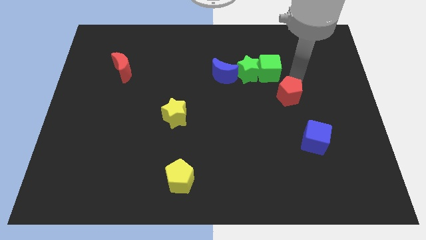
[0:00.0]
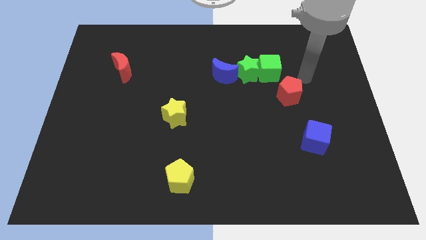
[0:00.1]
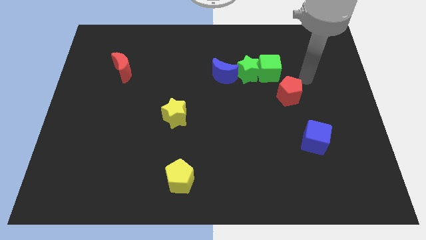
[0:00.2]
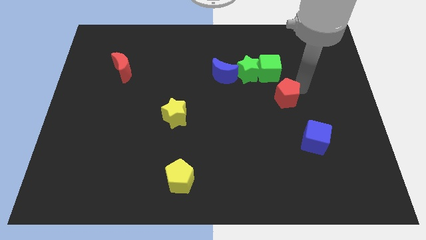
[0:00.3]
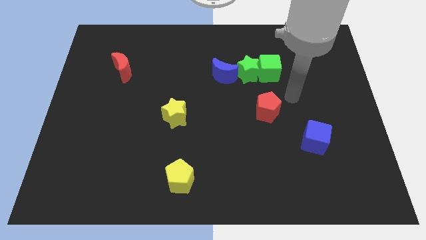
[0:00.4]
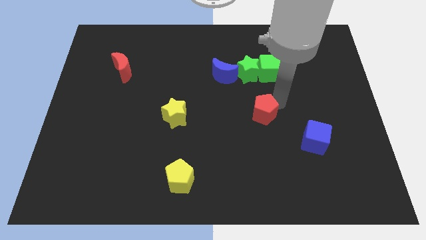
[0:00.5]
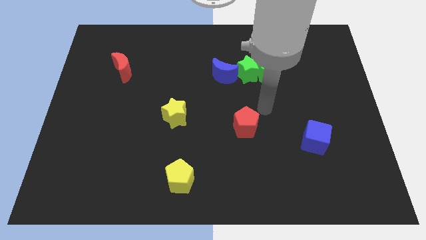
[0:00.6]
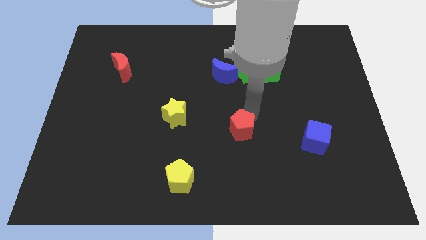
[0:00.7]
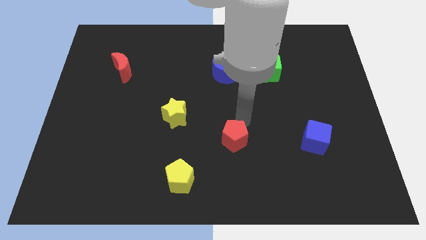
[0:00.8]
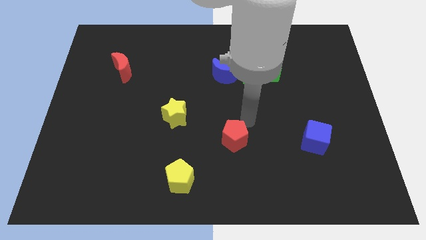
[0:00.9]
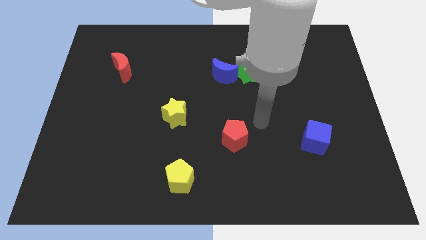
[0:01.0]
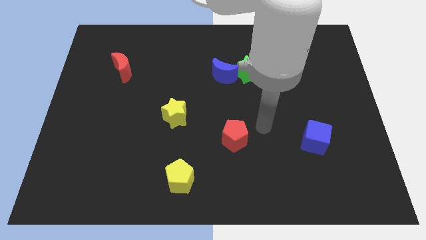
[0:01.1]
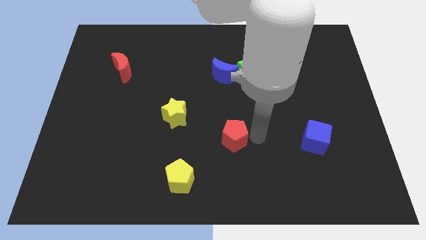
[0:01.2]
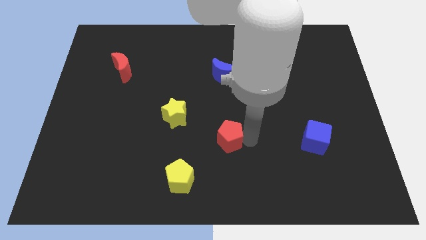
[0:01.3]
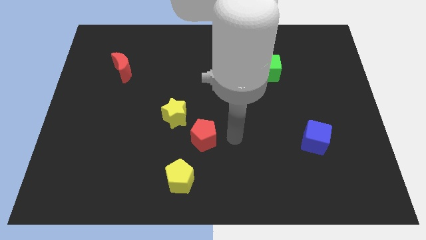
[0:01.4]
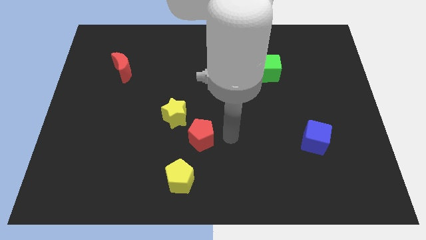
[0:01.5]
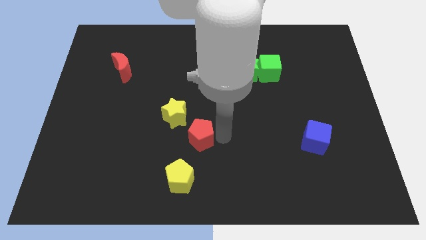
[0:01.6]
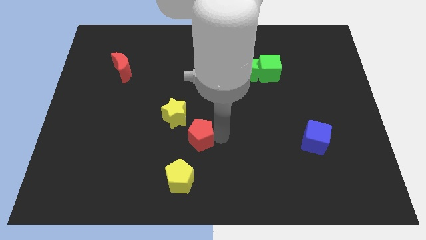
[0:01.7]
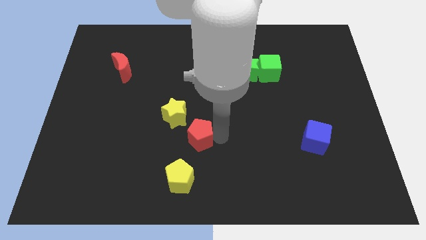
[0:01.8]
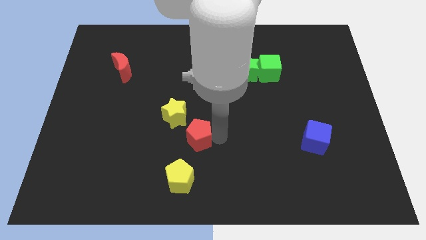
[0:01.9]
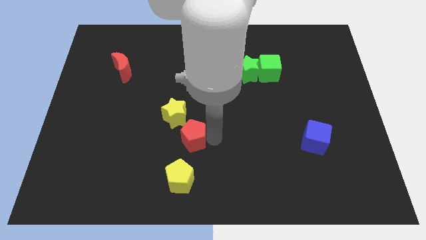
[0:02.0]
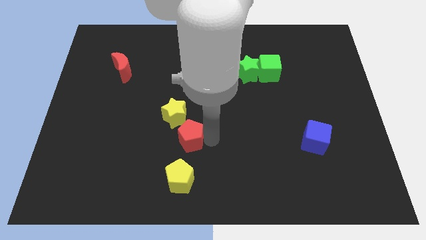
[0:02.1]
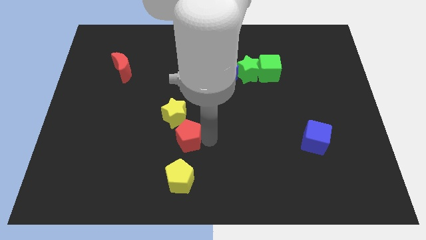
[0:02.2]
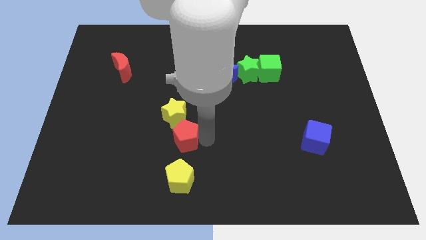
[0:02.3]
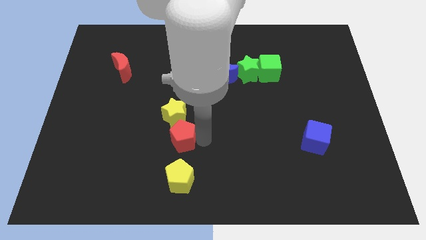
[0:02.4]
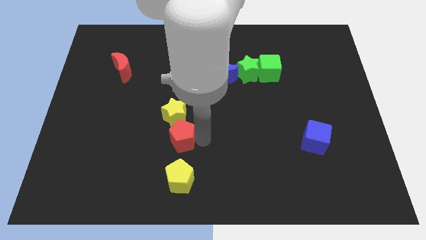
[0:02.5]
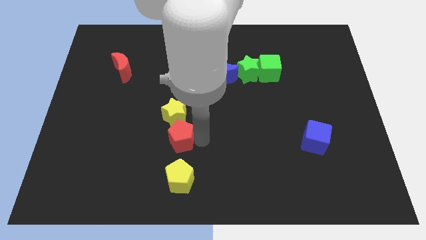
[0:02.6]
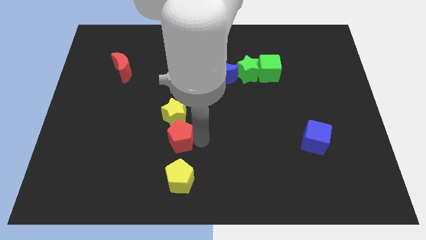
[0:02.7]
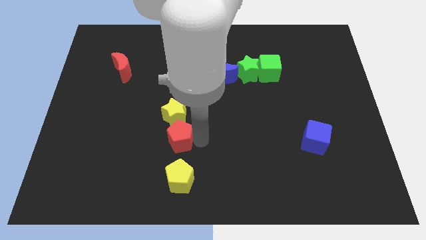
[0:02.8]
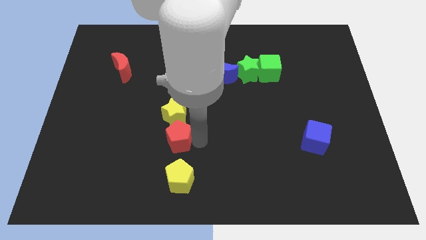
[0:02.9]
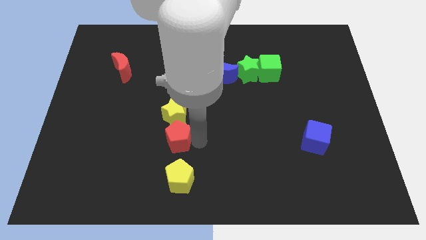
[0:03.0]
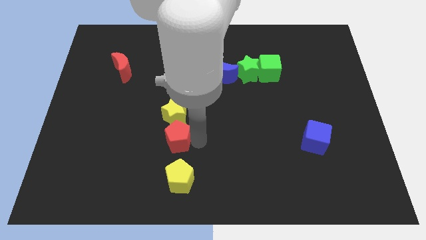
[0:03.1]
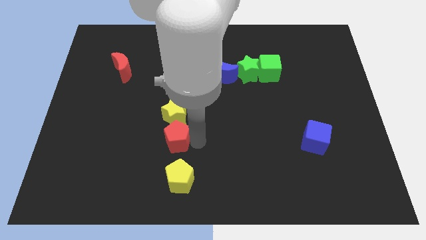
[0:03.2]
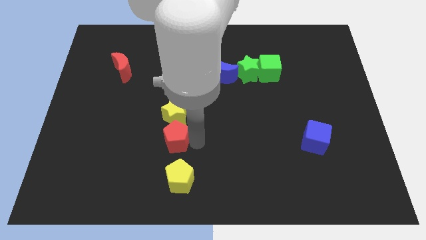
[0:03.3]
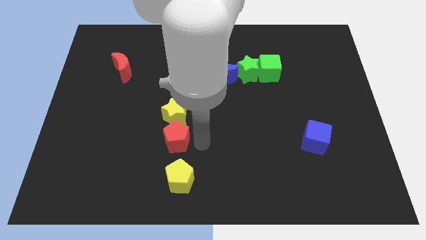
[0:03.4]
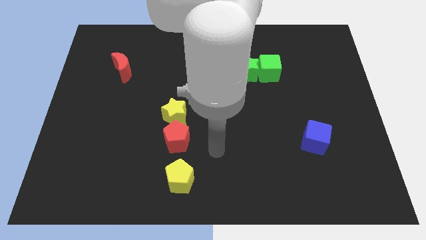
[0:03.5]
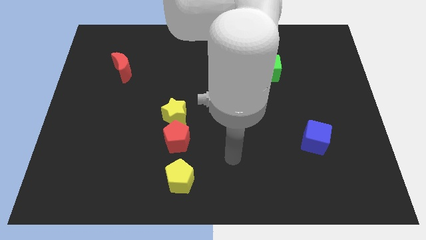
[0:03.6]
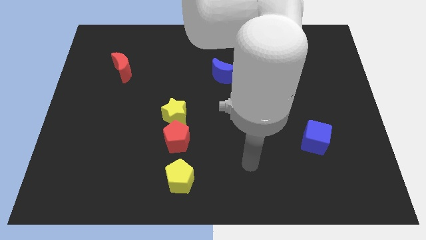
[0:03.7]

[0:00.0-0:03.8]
put red pentagon below yellow star

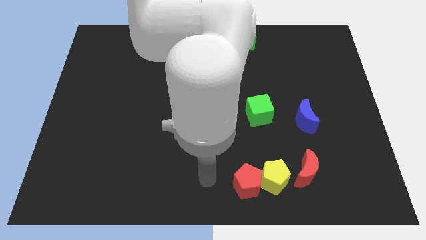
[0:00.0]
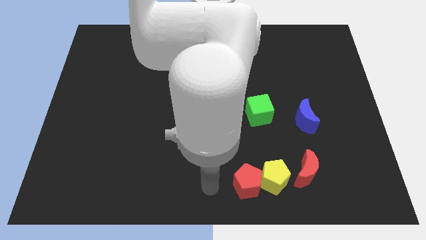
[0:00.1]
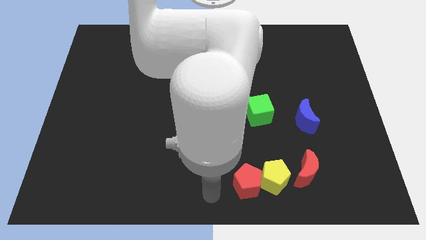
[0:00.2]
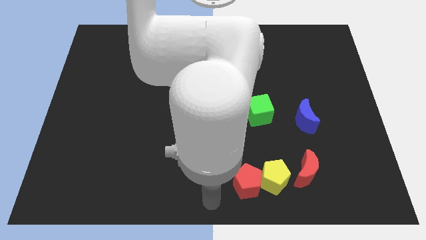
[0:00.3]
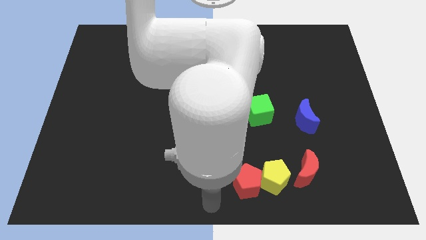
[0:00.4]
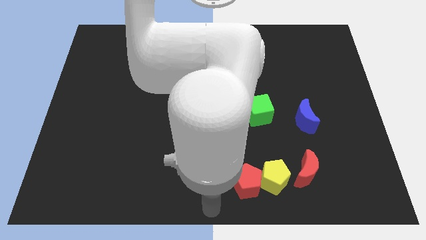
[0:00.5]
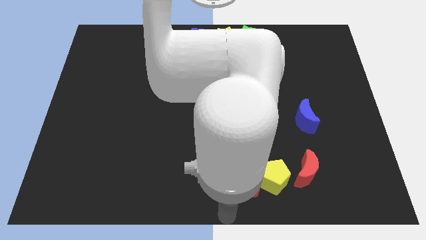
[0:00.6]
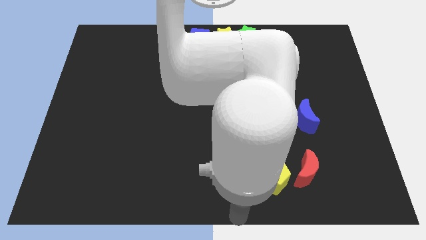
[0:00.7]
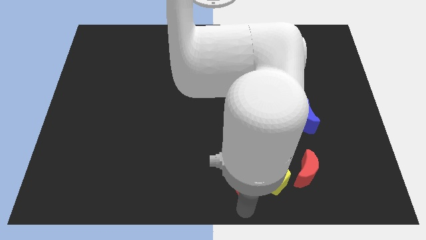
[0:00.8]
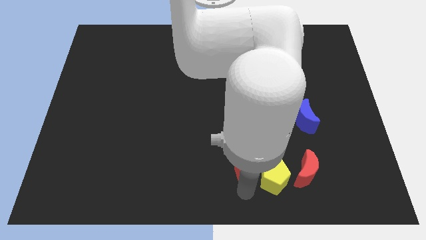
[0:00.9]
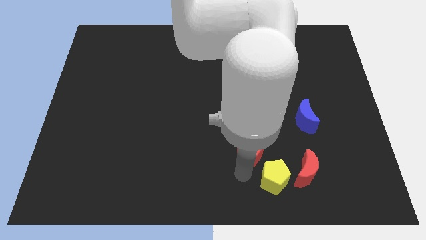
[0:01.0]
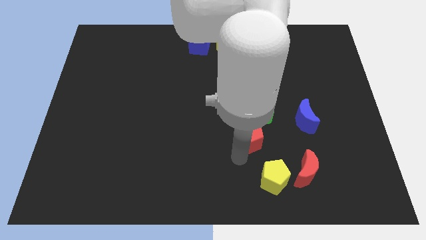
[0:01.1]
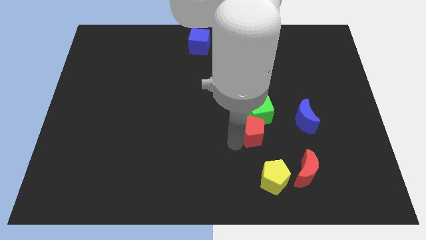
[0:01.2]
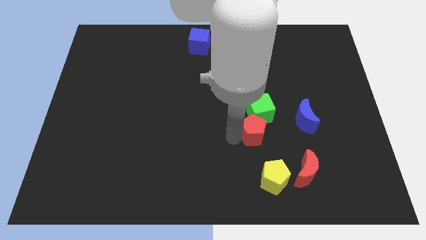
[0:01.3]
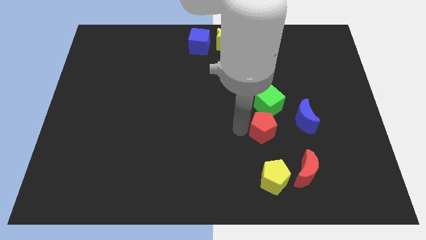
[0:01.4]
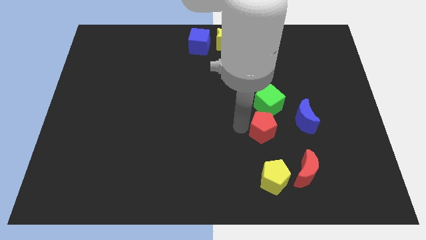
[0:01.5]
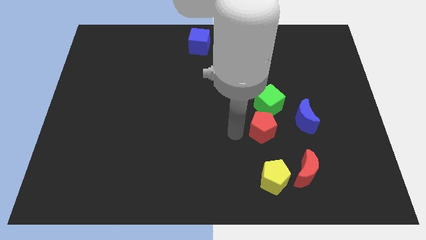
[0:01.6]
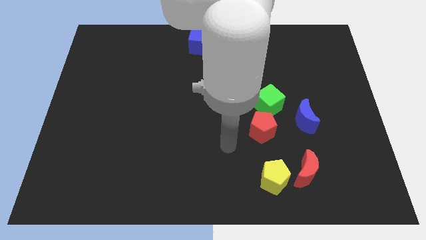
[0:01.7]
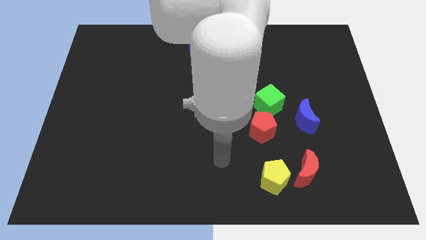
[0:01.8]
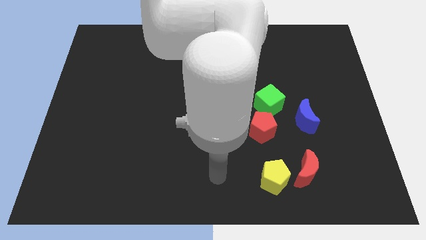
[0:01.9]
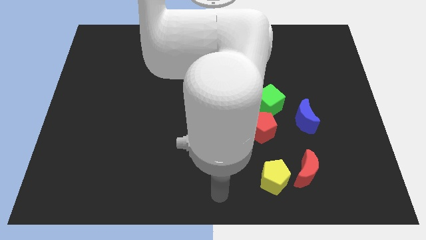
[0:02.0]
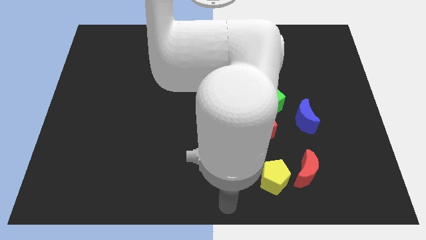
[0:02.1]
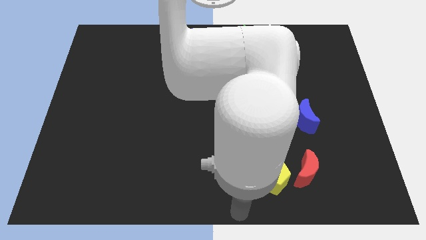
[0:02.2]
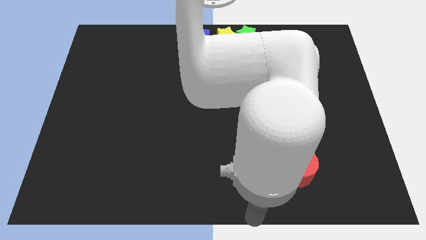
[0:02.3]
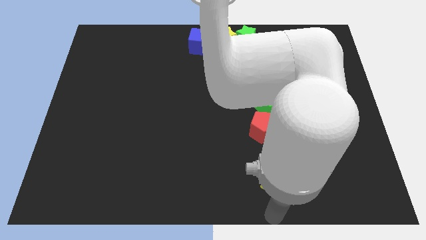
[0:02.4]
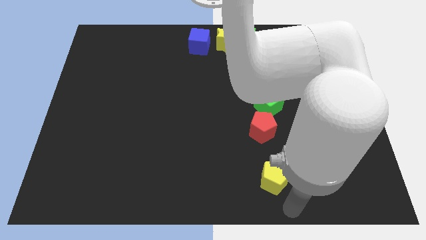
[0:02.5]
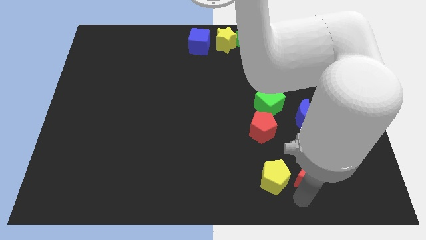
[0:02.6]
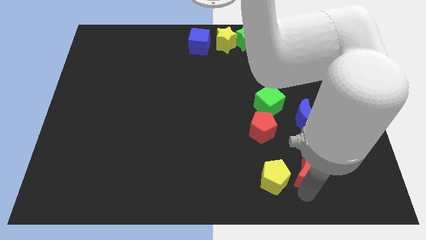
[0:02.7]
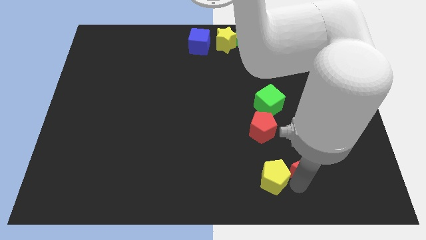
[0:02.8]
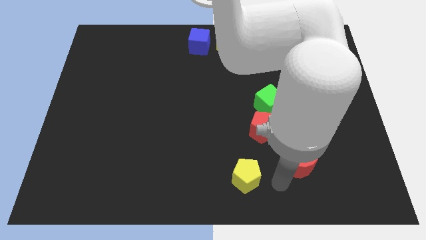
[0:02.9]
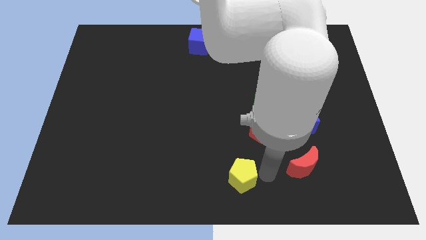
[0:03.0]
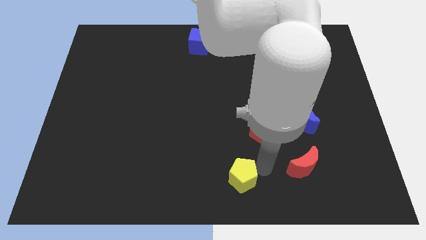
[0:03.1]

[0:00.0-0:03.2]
move red pentagon into the bottom of green cube

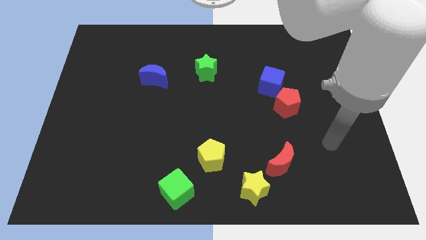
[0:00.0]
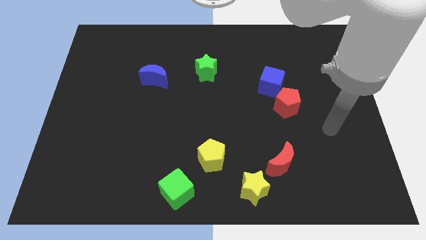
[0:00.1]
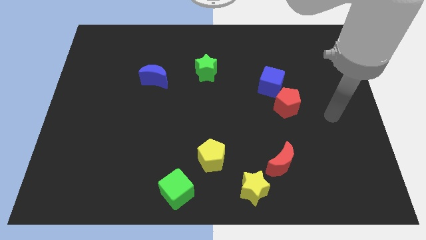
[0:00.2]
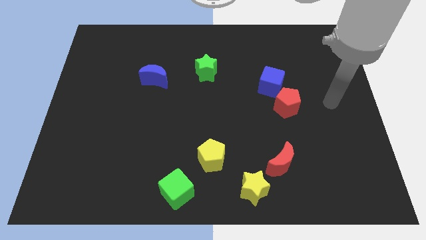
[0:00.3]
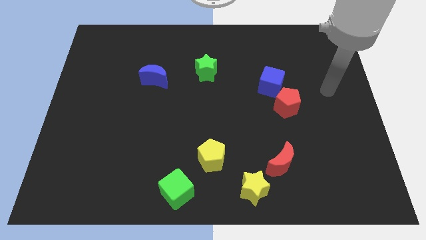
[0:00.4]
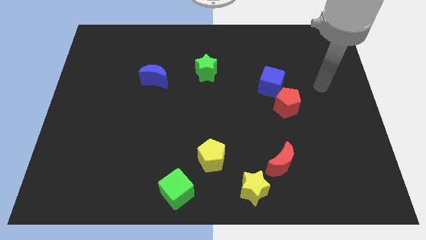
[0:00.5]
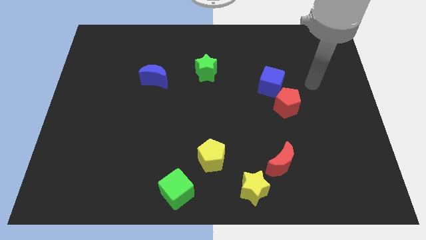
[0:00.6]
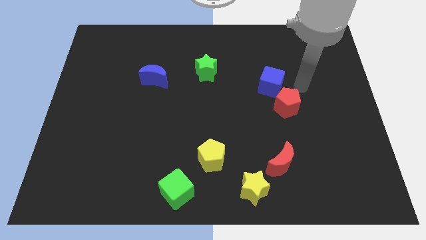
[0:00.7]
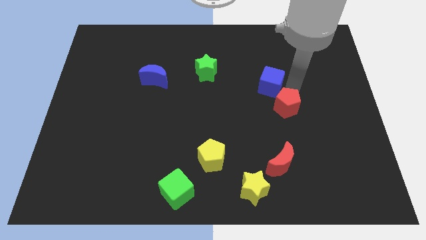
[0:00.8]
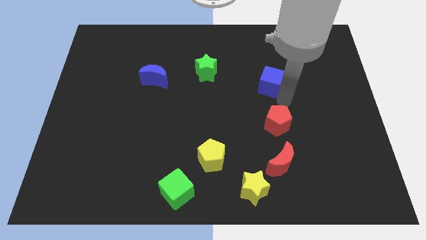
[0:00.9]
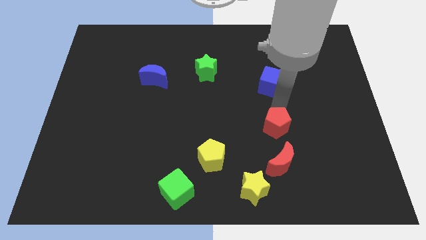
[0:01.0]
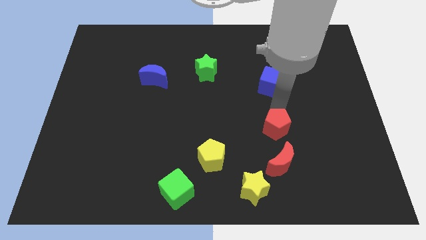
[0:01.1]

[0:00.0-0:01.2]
drag the red pentagon diagonally top right to yellow pentagon

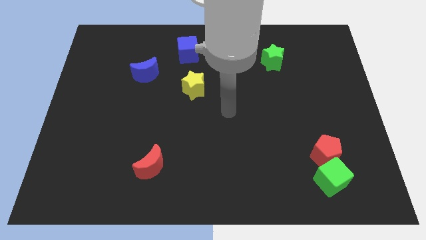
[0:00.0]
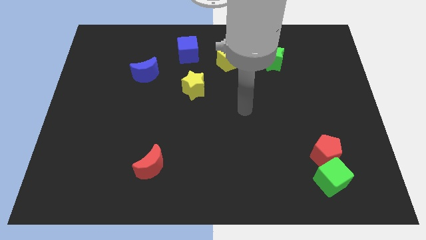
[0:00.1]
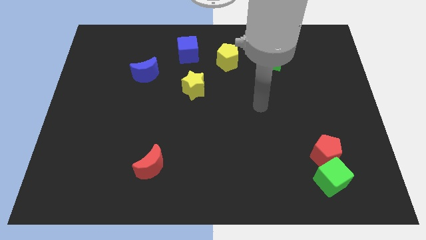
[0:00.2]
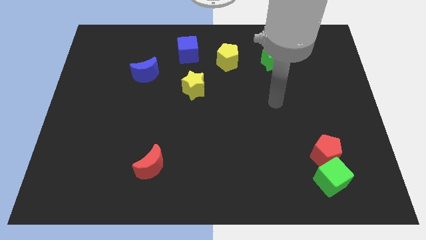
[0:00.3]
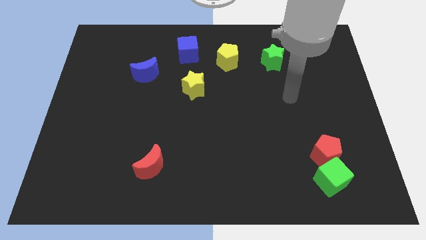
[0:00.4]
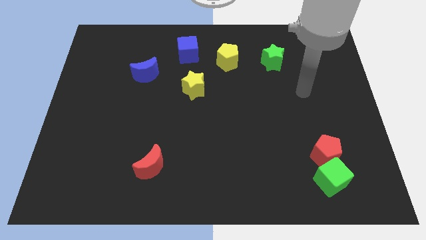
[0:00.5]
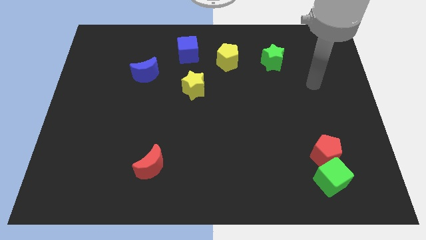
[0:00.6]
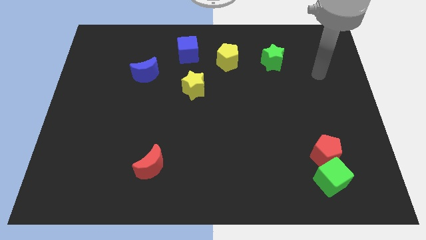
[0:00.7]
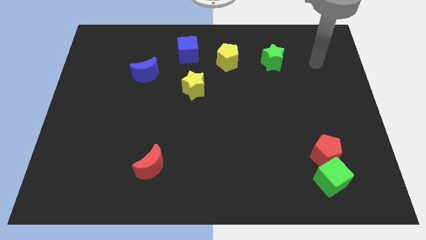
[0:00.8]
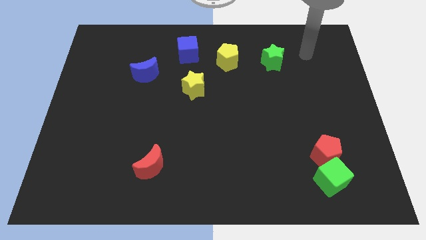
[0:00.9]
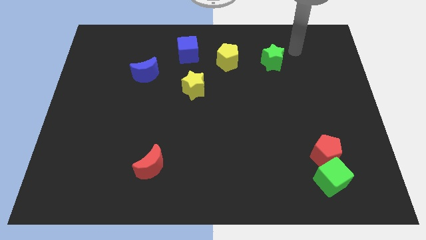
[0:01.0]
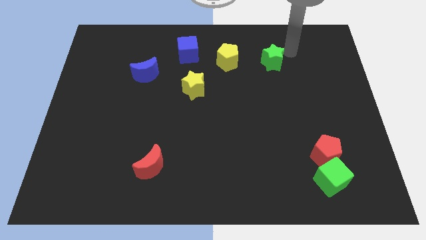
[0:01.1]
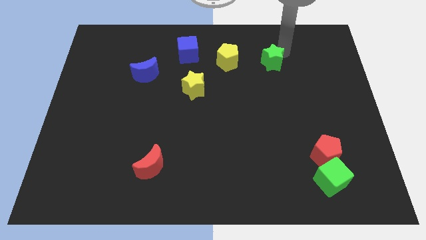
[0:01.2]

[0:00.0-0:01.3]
point your hand at the top right side of the green star
